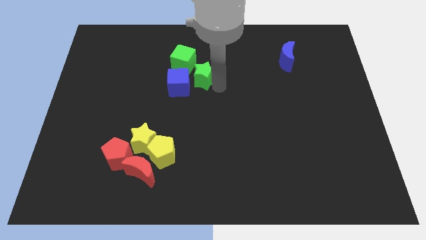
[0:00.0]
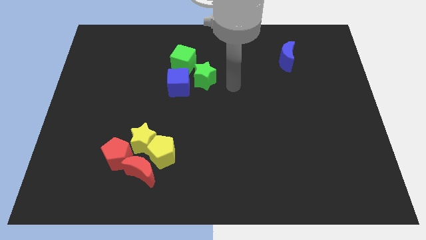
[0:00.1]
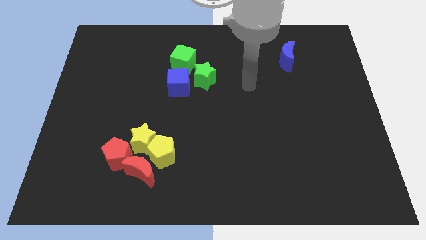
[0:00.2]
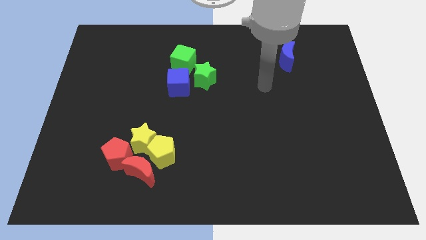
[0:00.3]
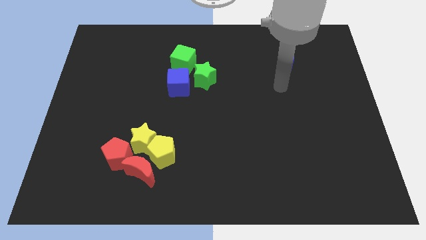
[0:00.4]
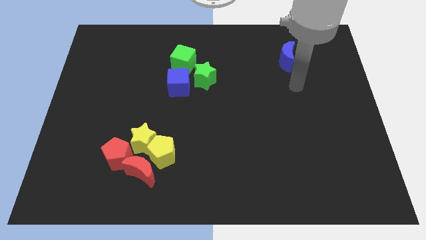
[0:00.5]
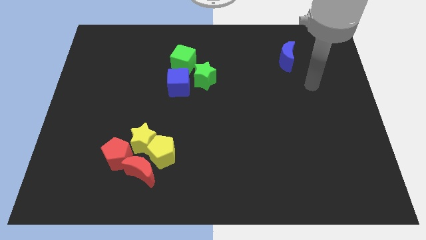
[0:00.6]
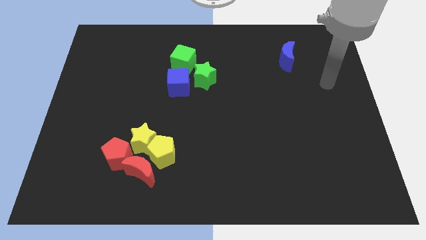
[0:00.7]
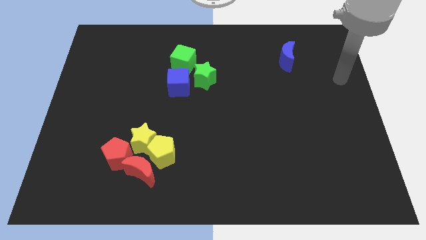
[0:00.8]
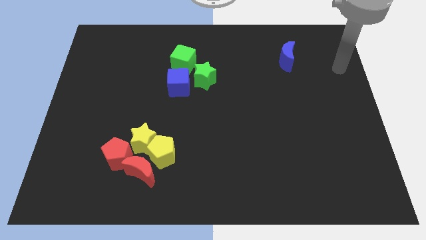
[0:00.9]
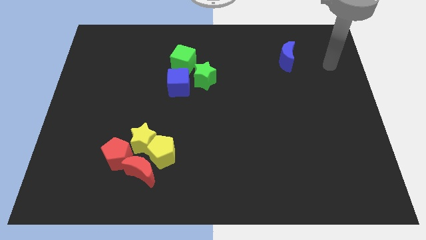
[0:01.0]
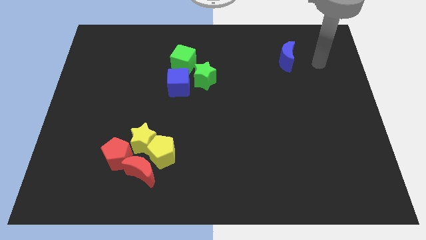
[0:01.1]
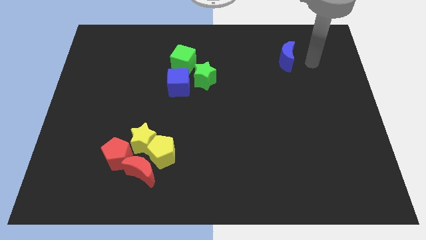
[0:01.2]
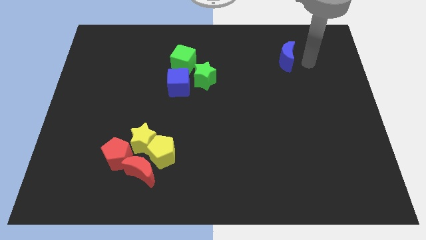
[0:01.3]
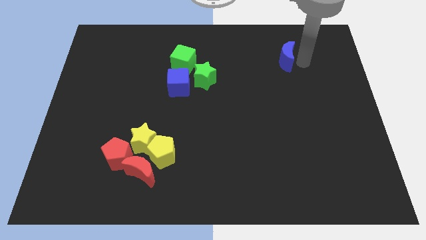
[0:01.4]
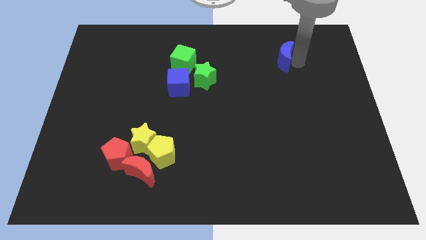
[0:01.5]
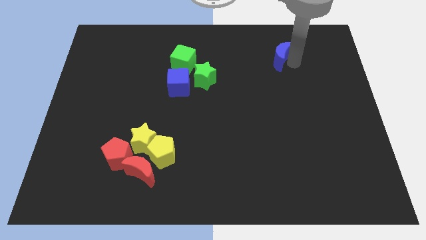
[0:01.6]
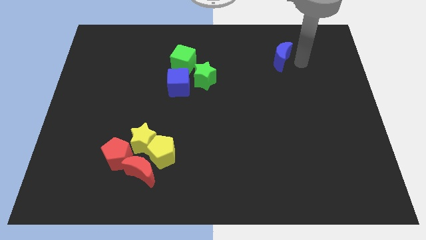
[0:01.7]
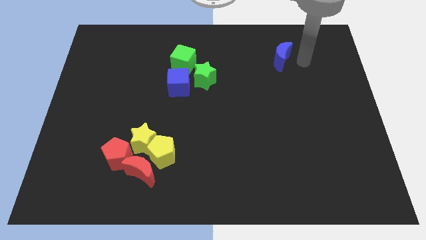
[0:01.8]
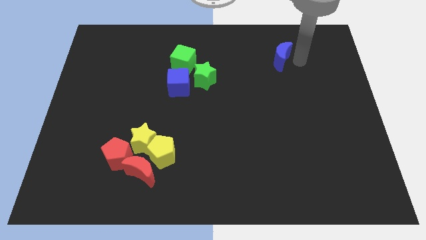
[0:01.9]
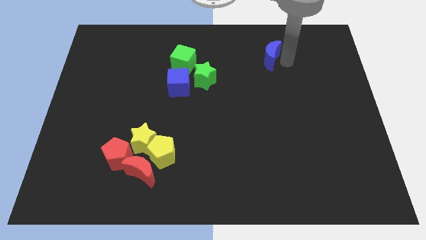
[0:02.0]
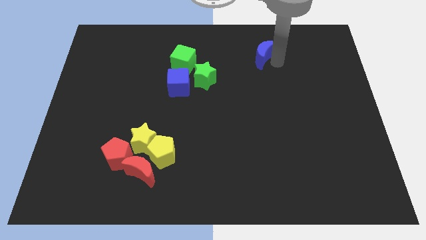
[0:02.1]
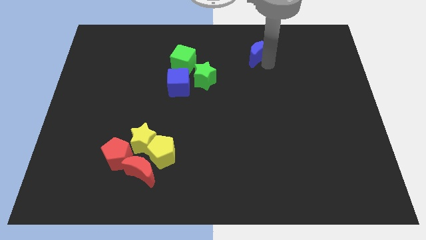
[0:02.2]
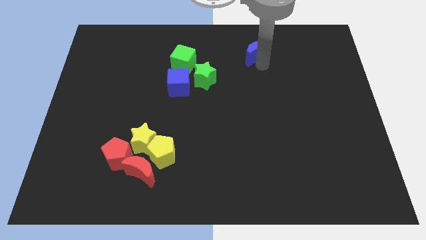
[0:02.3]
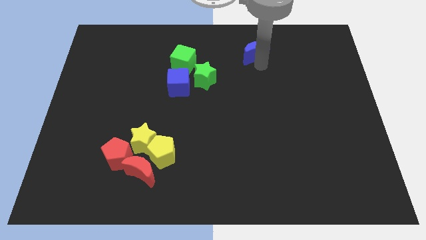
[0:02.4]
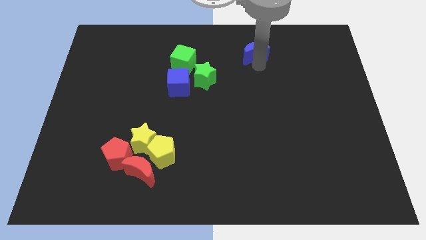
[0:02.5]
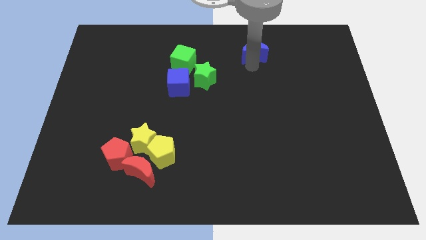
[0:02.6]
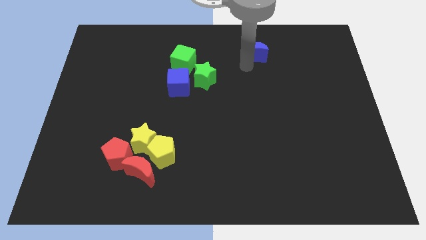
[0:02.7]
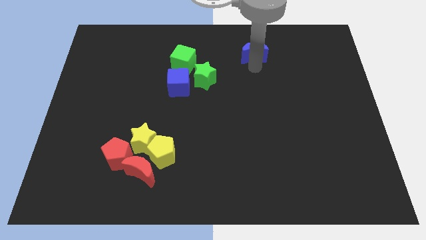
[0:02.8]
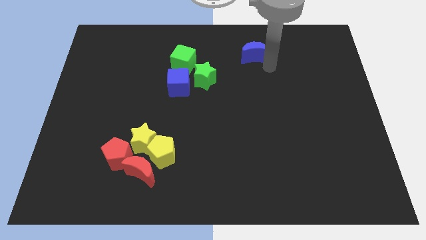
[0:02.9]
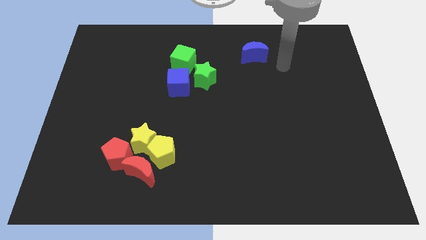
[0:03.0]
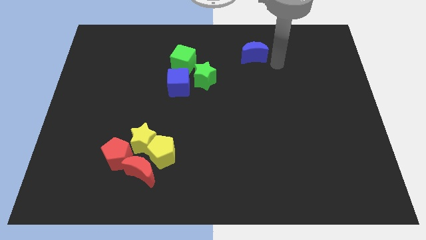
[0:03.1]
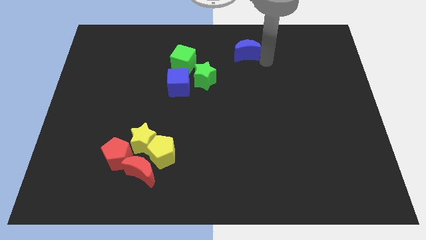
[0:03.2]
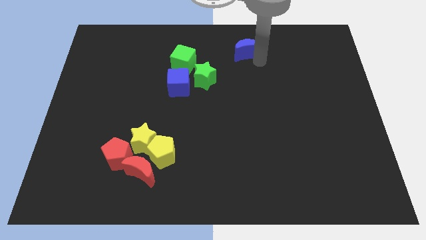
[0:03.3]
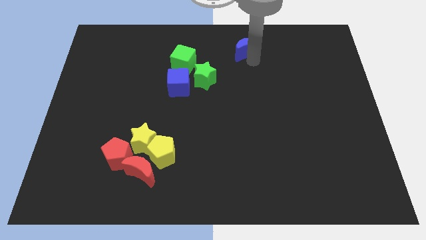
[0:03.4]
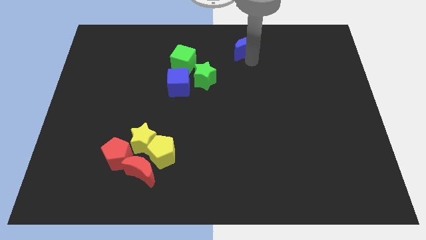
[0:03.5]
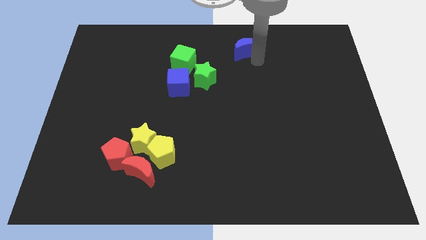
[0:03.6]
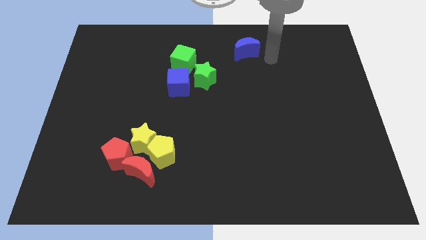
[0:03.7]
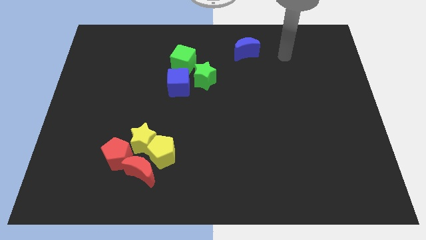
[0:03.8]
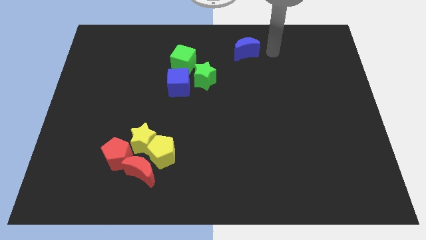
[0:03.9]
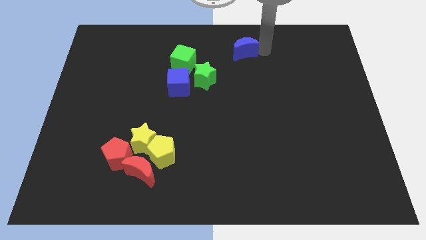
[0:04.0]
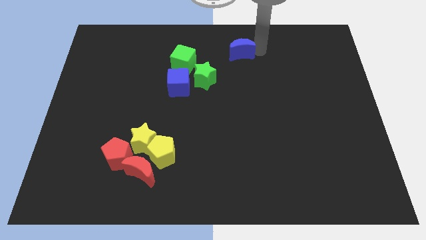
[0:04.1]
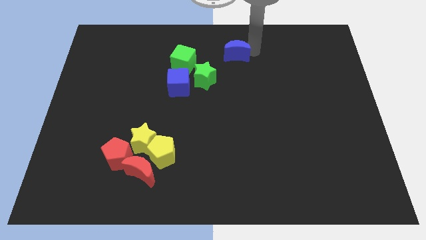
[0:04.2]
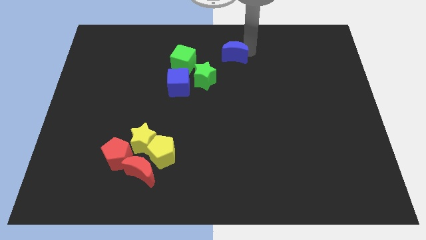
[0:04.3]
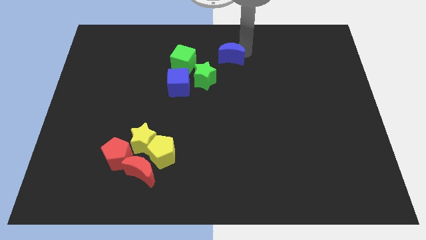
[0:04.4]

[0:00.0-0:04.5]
push the blue crescent towards the group of blocks

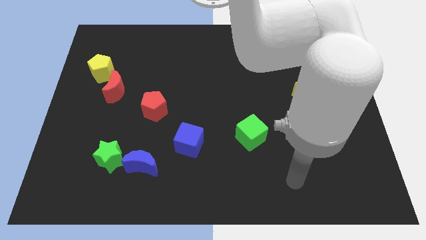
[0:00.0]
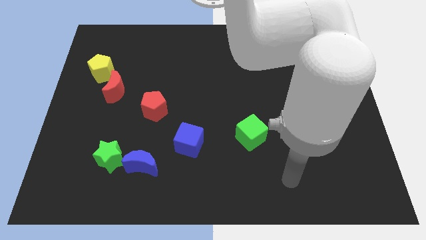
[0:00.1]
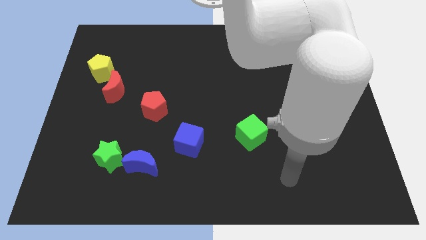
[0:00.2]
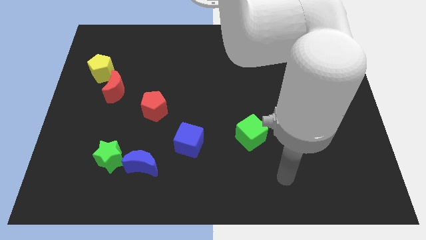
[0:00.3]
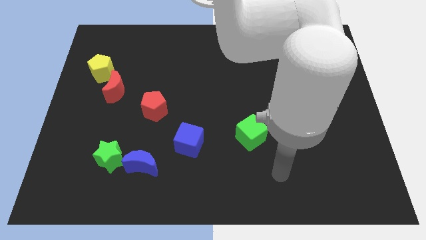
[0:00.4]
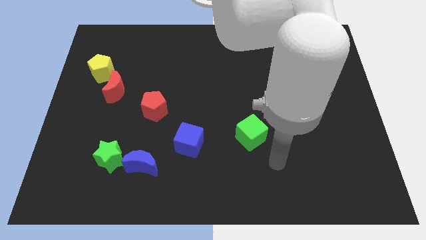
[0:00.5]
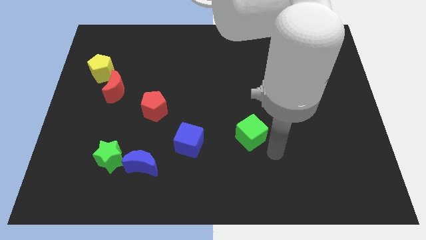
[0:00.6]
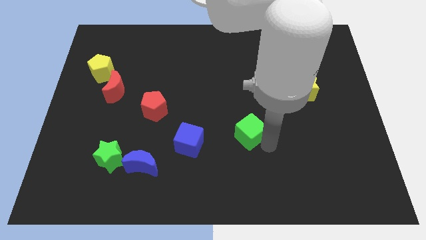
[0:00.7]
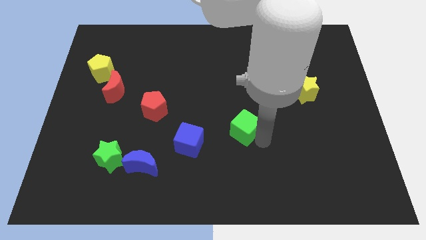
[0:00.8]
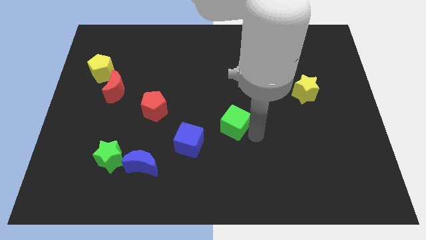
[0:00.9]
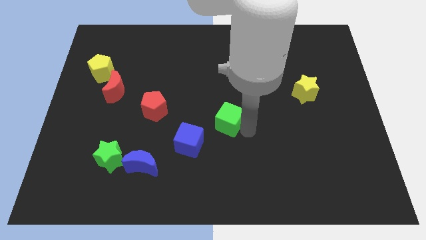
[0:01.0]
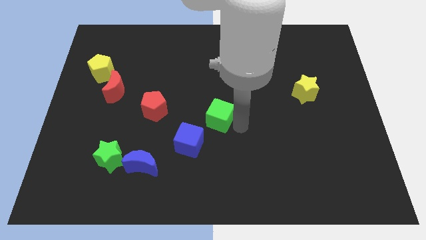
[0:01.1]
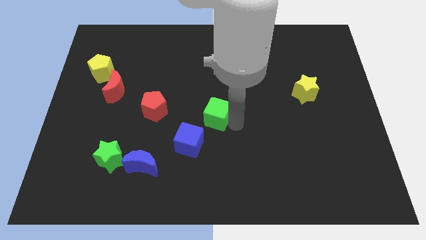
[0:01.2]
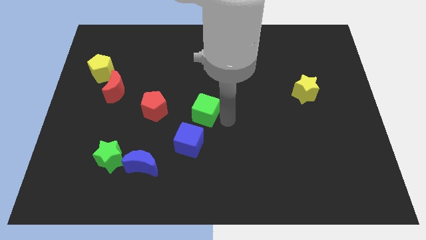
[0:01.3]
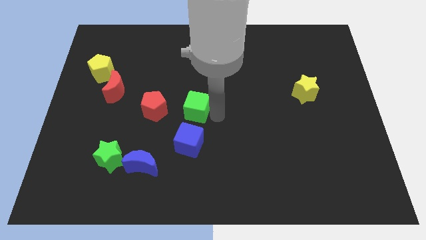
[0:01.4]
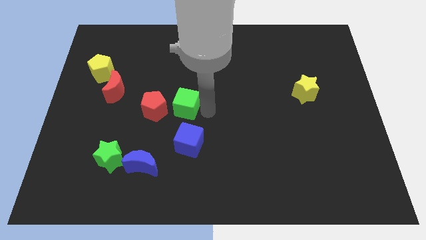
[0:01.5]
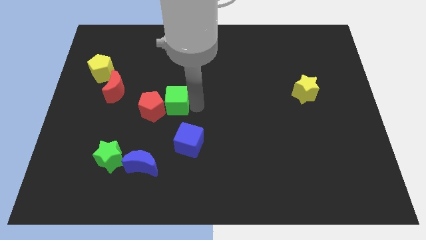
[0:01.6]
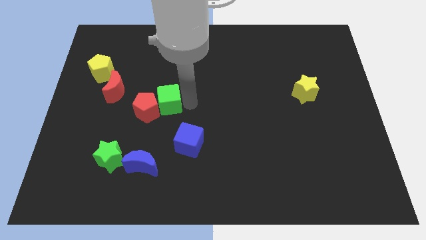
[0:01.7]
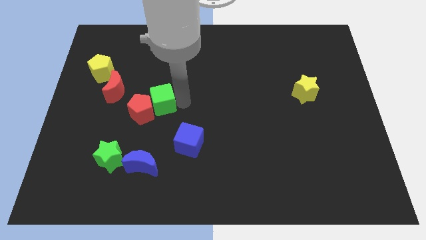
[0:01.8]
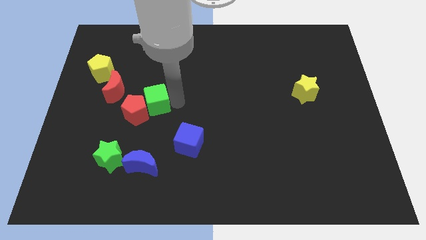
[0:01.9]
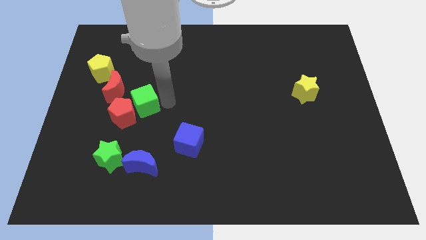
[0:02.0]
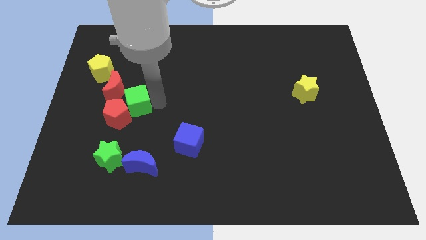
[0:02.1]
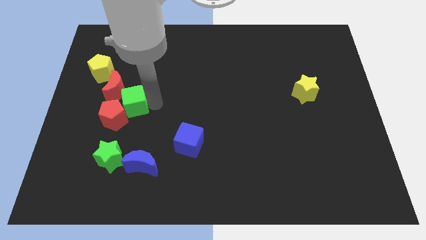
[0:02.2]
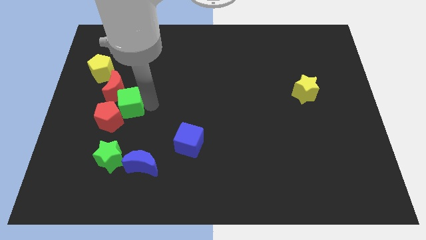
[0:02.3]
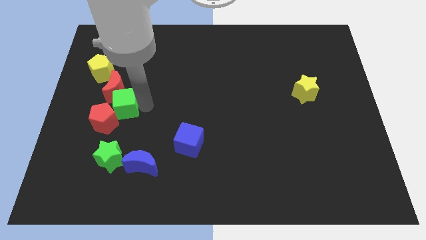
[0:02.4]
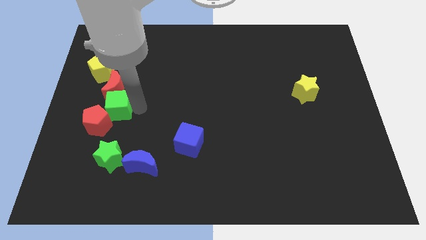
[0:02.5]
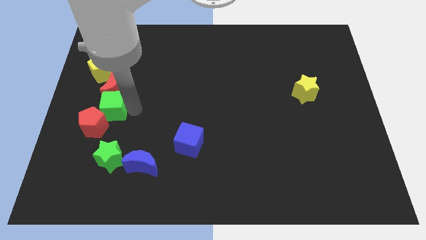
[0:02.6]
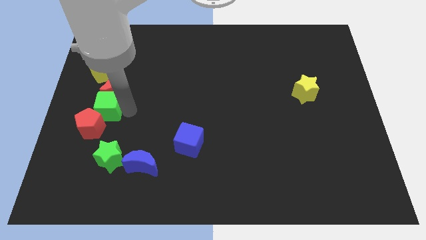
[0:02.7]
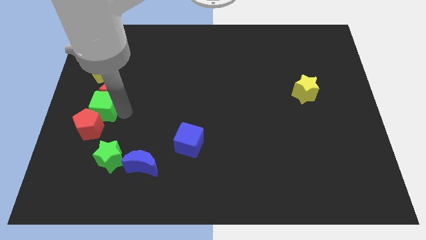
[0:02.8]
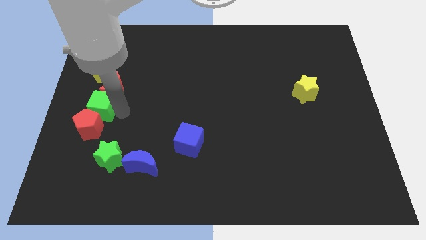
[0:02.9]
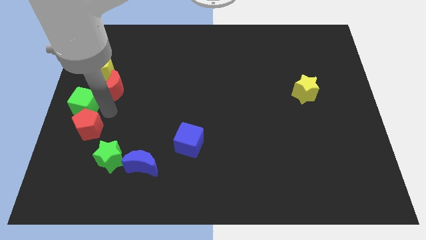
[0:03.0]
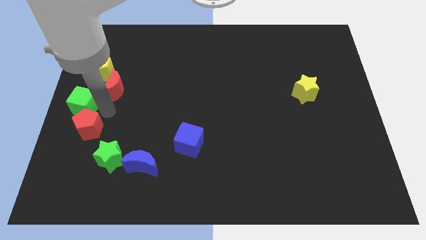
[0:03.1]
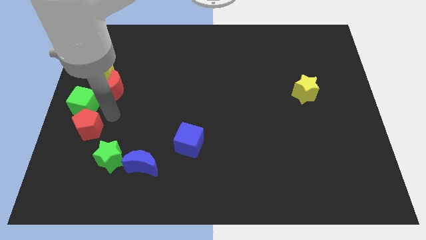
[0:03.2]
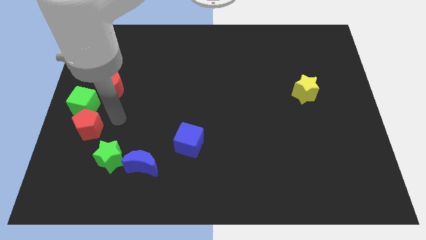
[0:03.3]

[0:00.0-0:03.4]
place the green cube above the red pentagon

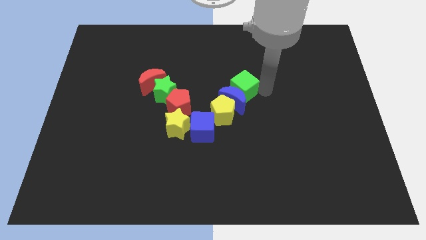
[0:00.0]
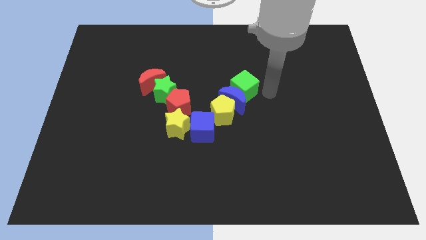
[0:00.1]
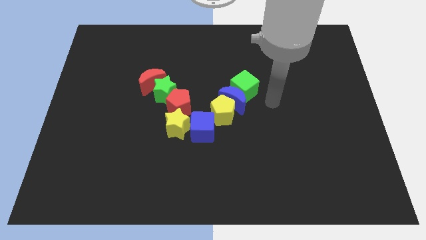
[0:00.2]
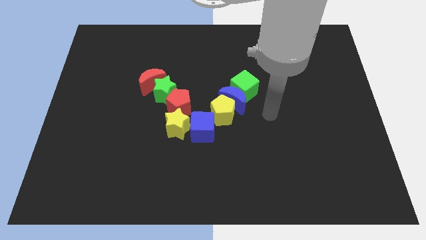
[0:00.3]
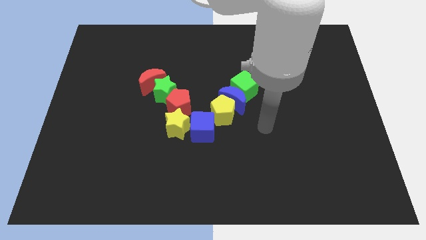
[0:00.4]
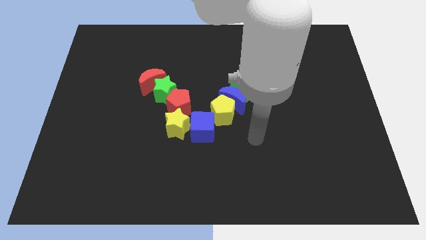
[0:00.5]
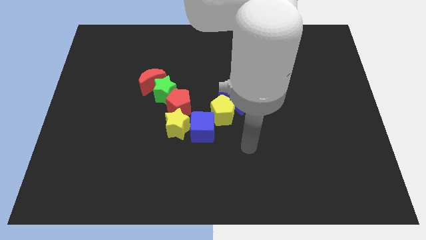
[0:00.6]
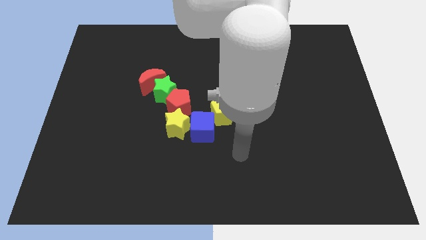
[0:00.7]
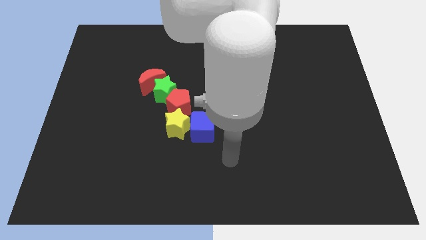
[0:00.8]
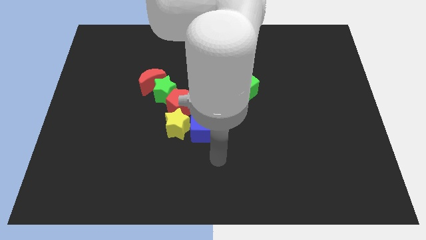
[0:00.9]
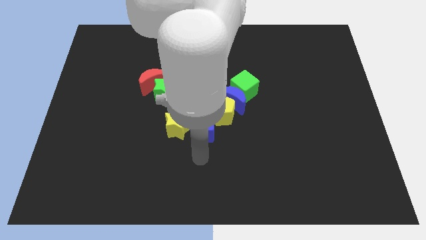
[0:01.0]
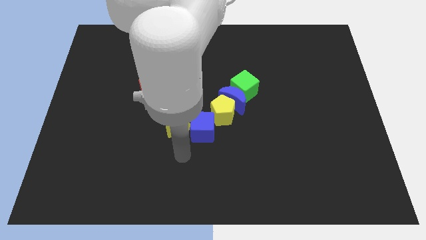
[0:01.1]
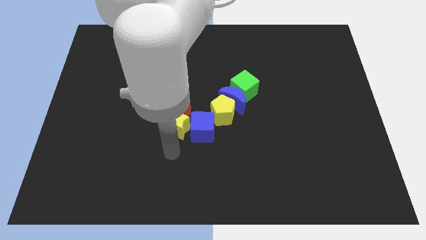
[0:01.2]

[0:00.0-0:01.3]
move the arm towards the bottom of the yellow star
